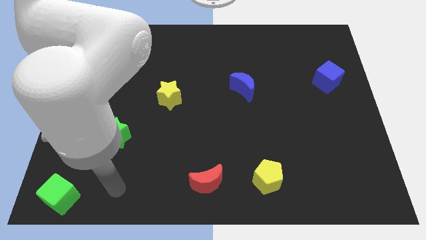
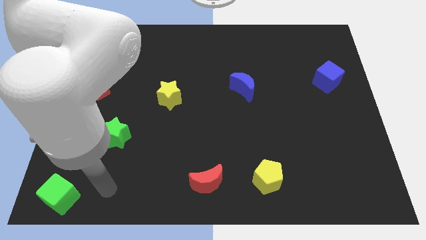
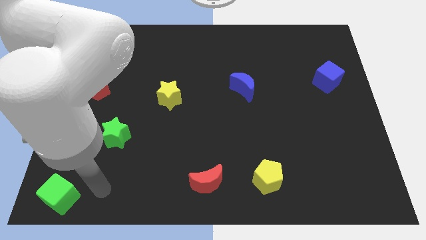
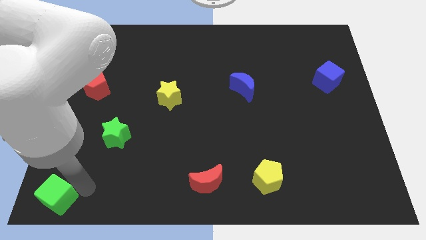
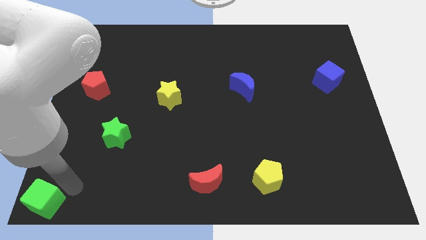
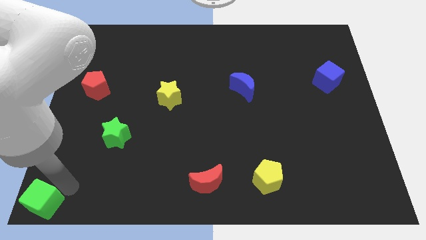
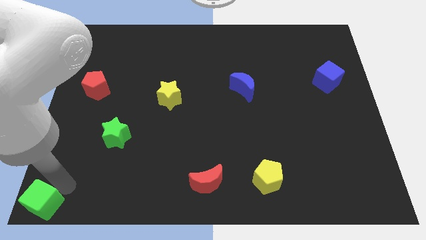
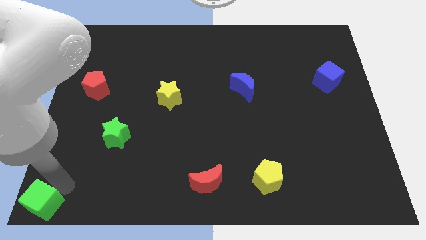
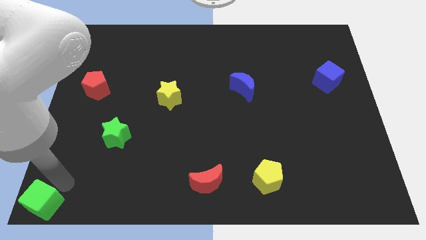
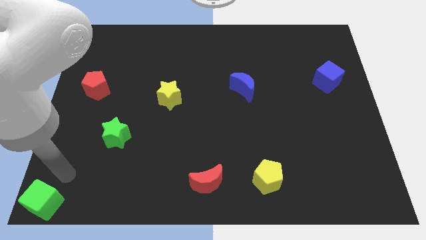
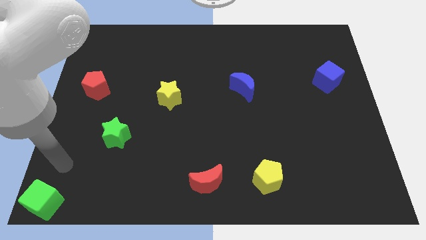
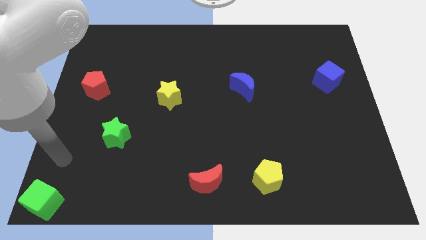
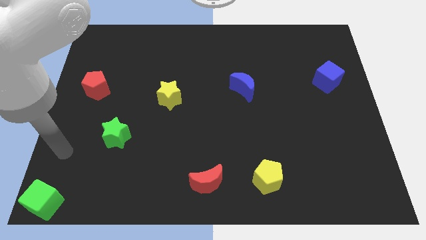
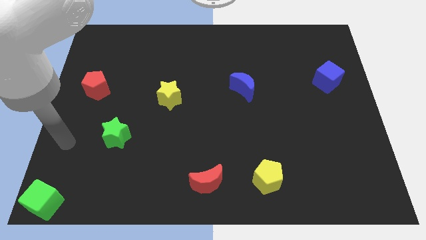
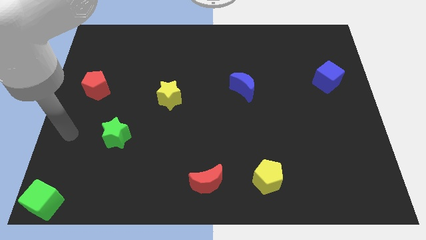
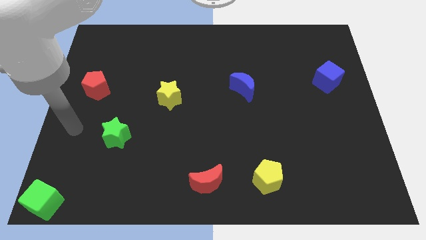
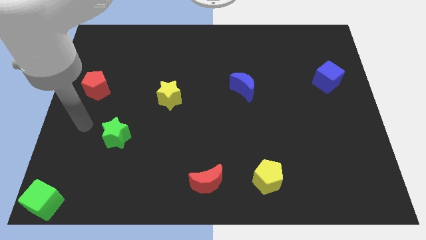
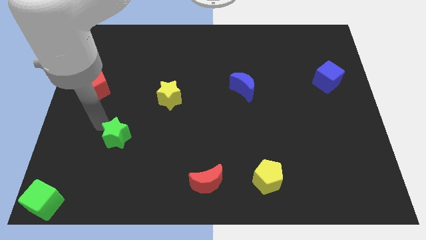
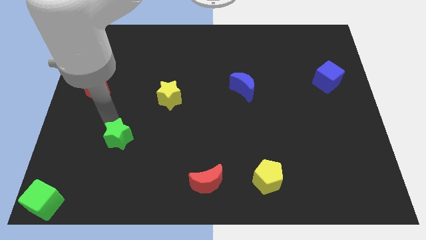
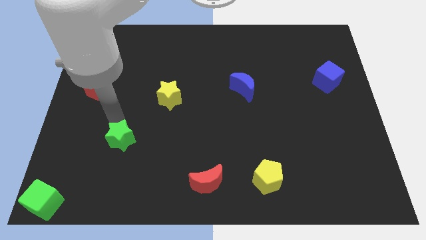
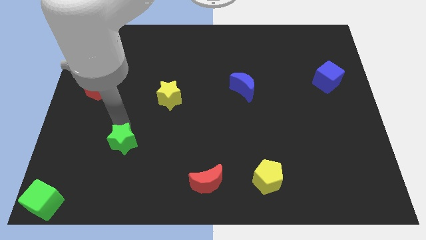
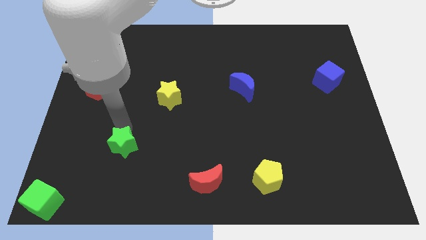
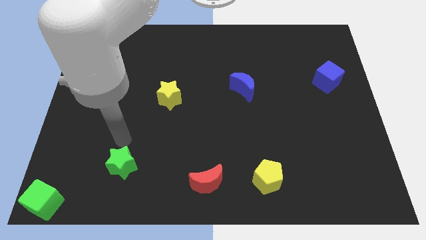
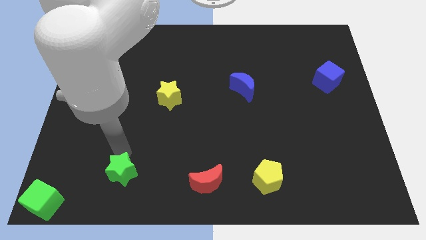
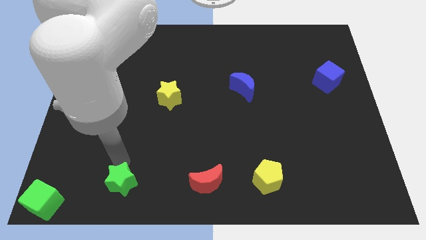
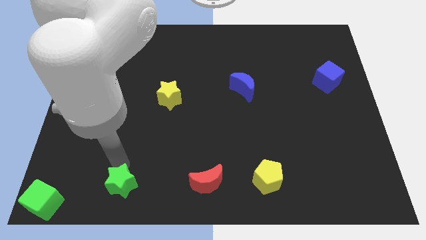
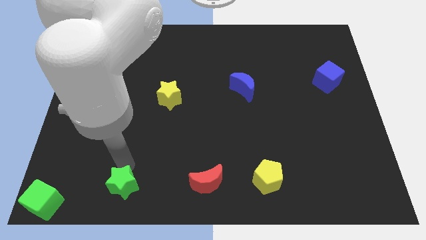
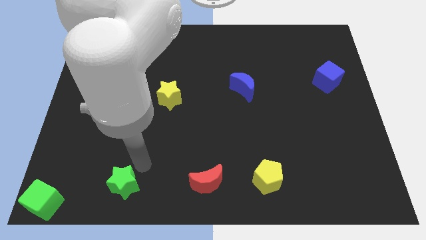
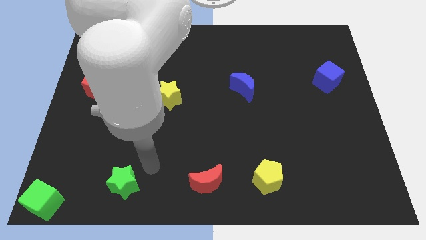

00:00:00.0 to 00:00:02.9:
place green star parallel to red moon

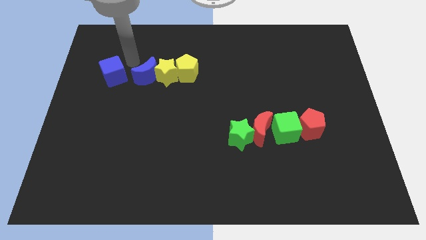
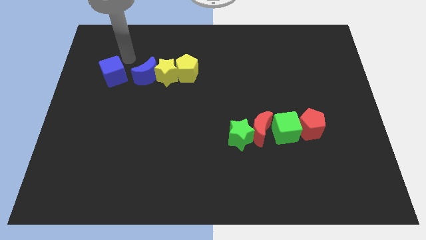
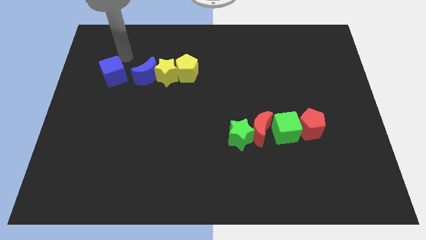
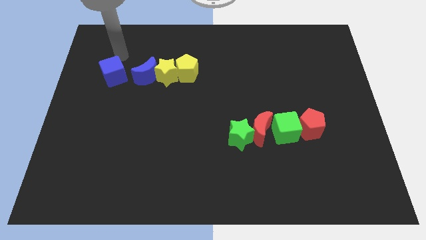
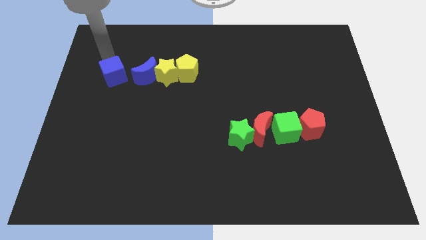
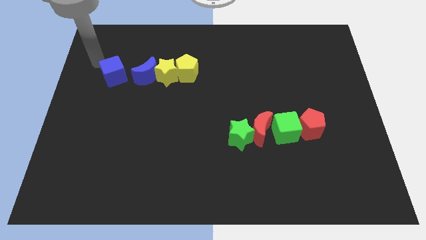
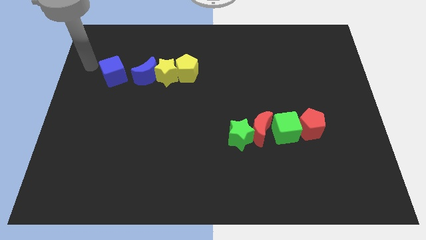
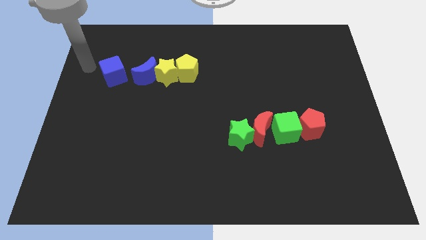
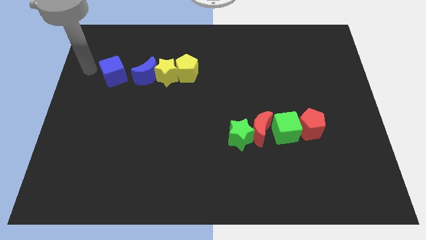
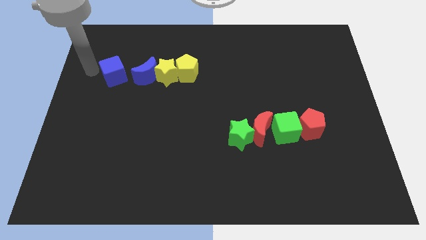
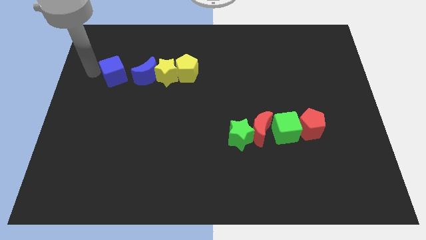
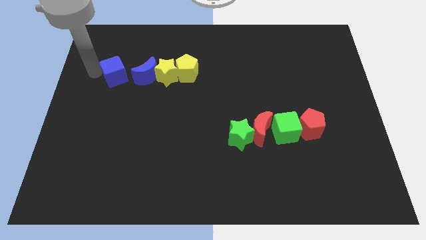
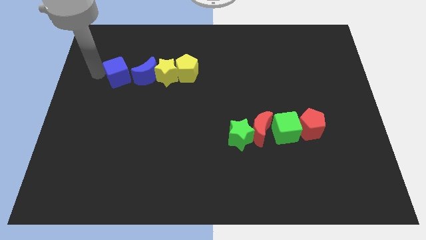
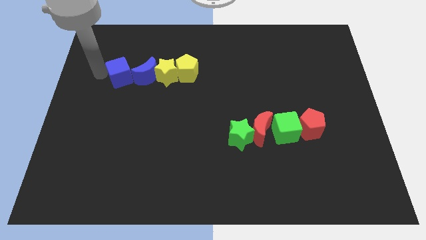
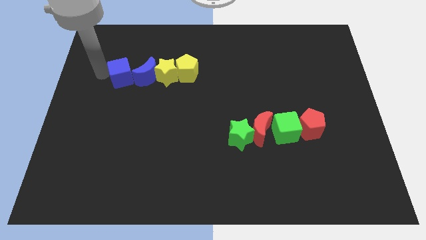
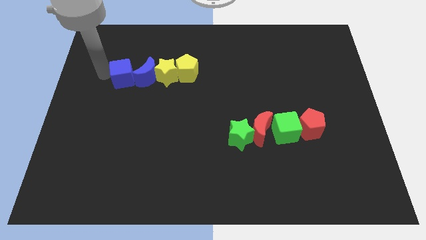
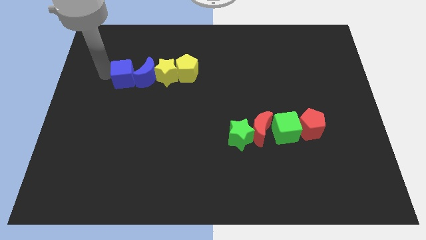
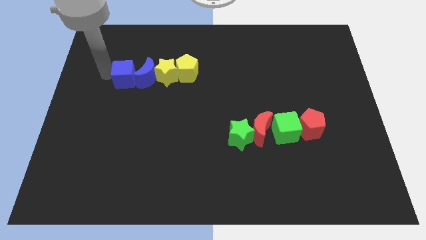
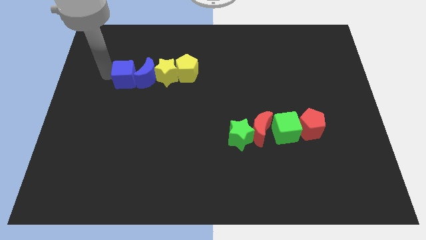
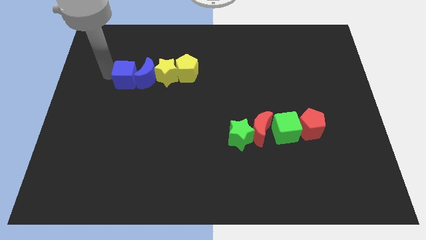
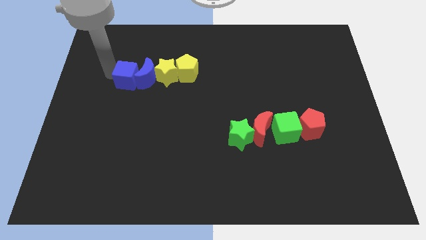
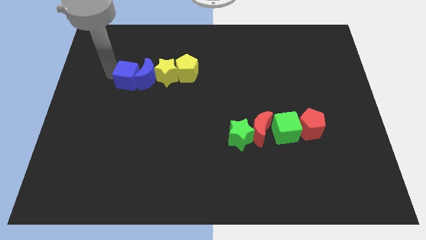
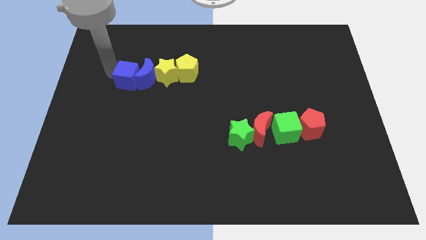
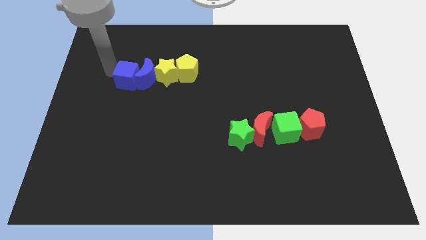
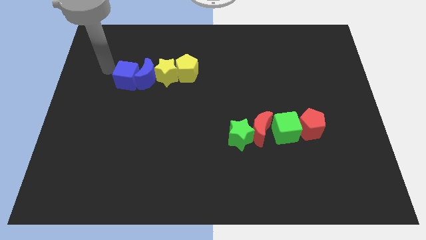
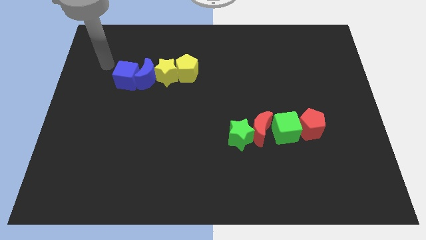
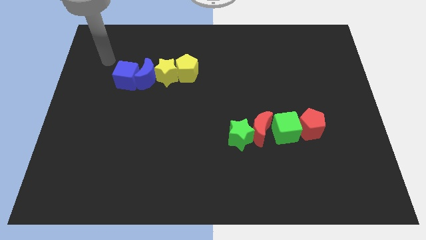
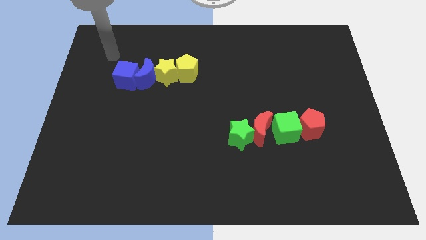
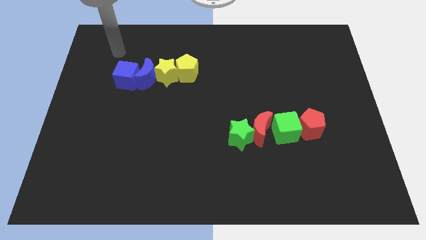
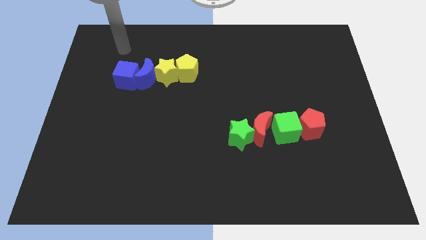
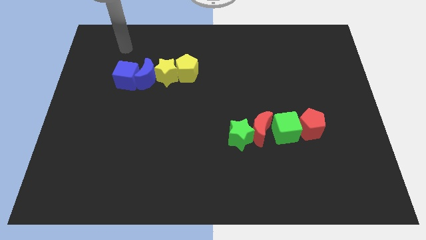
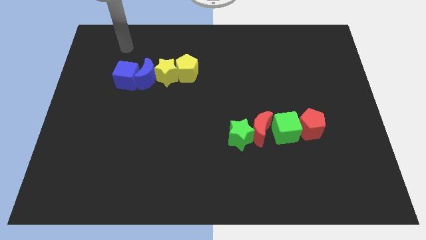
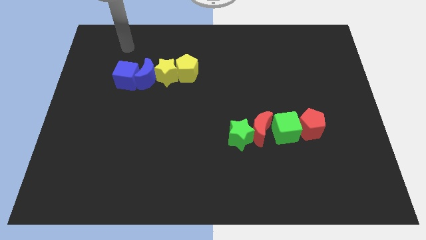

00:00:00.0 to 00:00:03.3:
push the blue cube close to the blue crescent

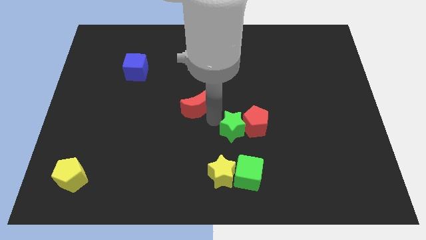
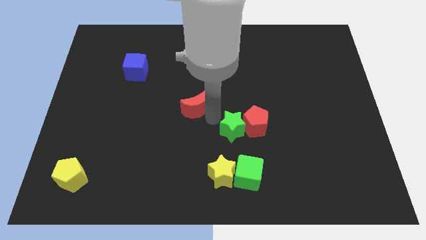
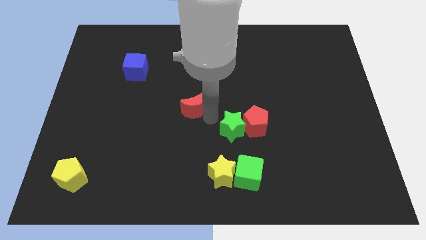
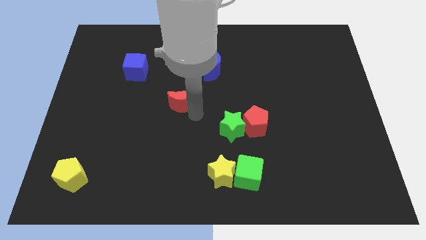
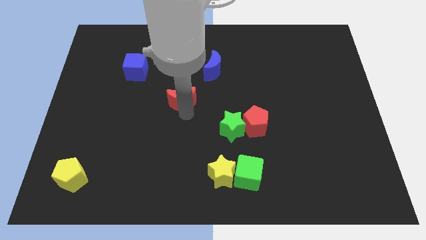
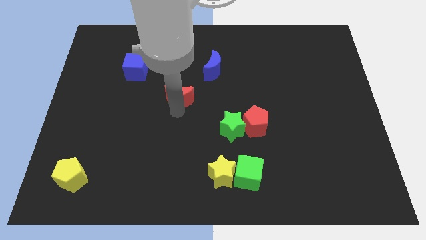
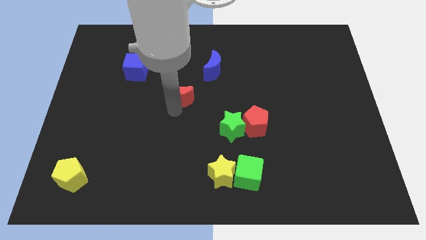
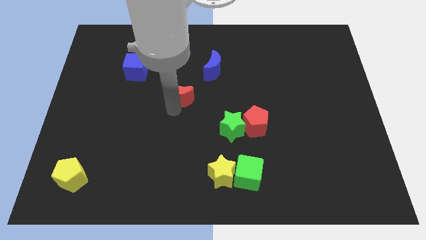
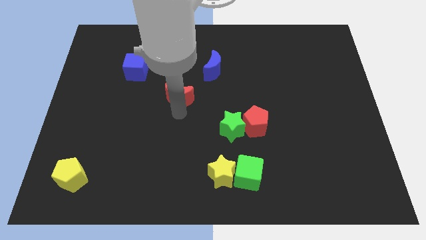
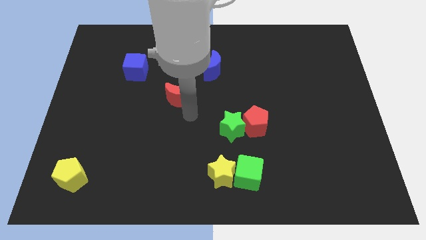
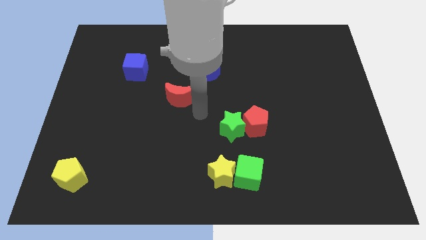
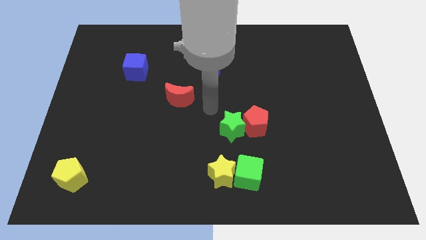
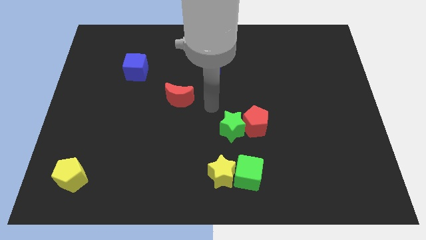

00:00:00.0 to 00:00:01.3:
move the red crescent to the bottom left side of the blue crescent

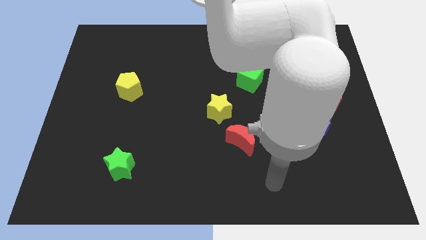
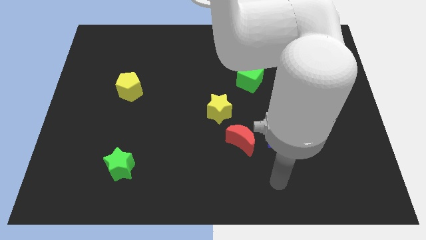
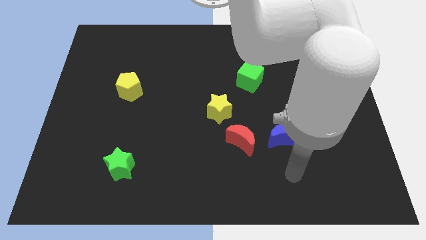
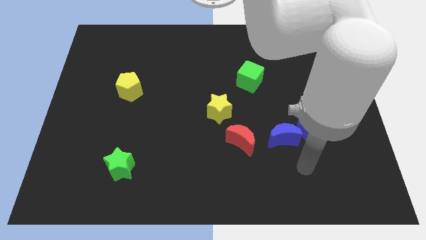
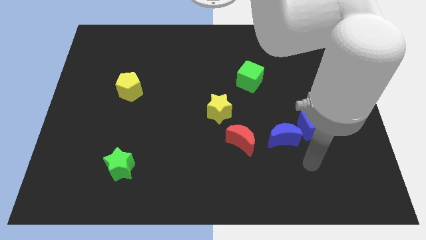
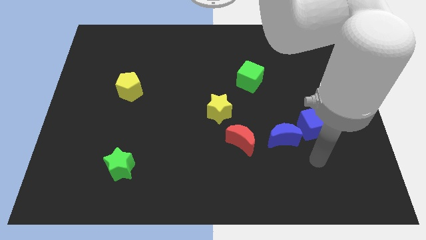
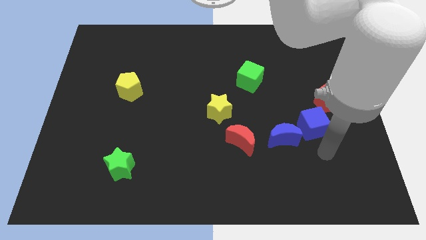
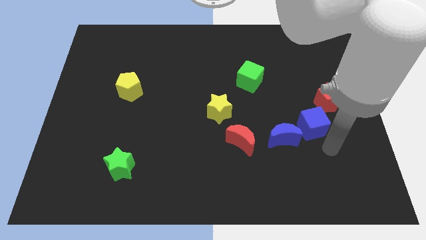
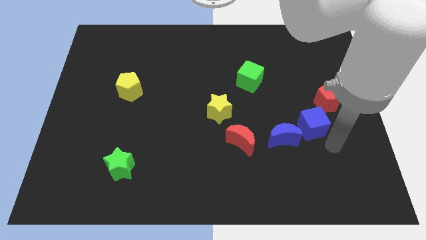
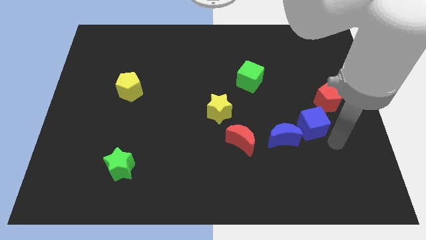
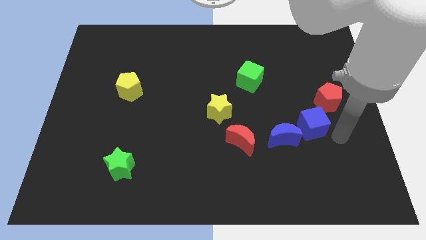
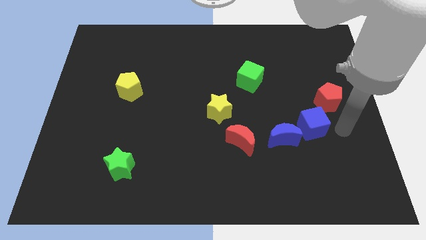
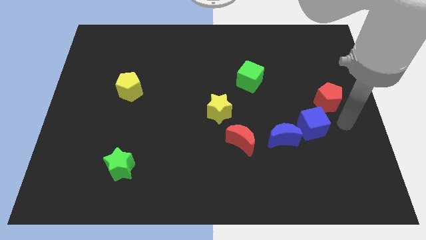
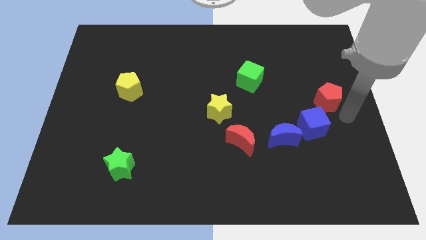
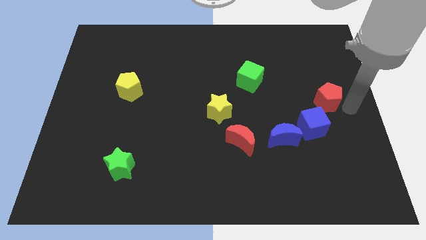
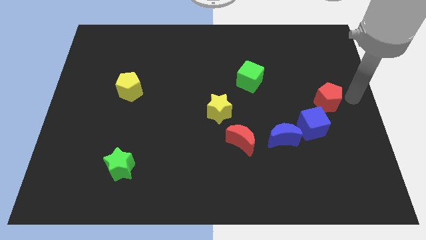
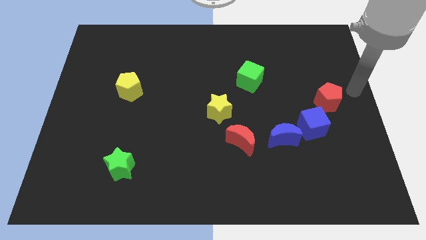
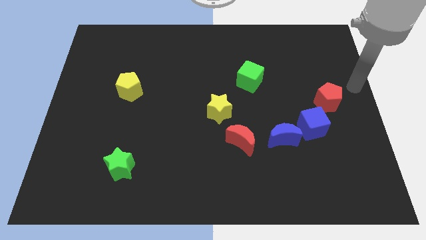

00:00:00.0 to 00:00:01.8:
point your hand at the right side of the red pentagon
